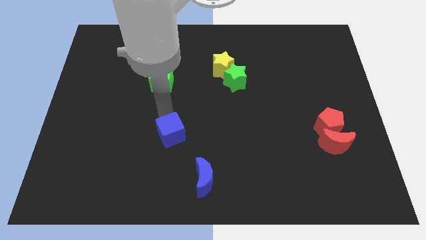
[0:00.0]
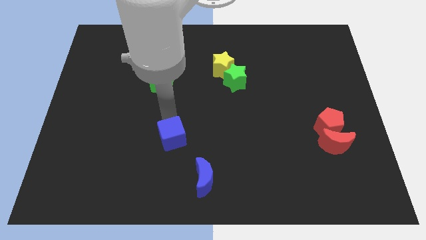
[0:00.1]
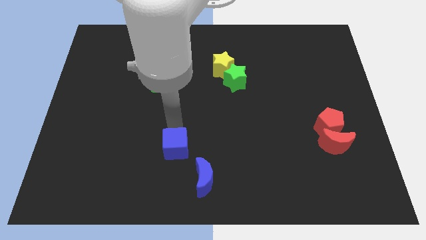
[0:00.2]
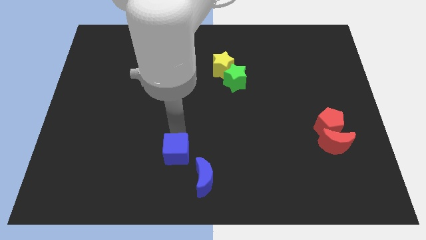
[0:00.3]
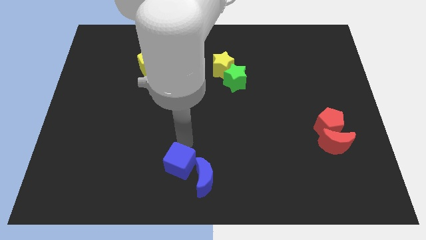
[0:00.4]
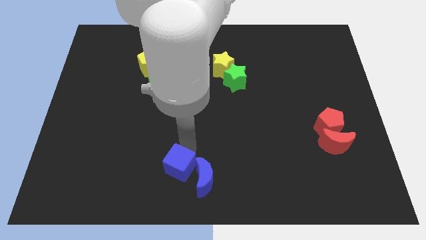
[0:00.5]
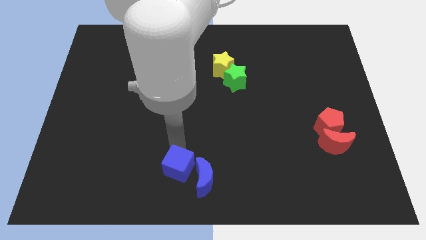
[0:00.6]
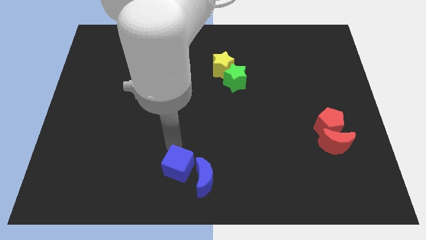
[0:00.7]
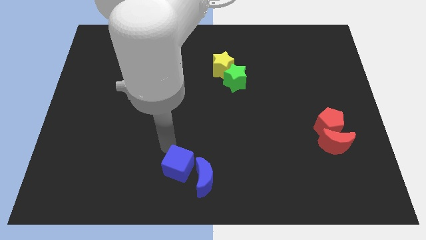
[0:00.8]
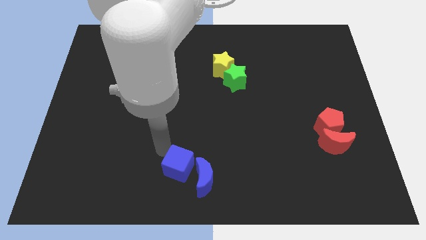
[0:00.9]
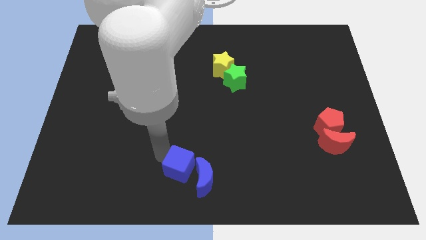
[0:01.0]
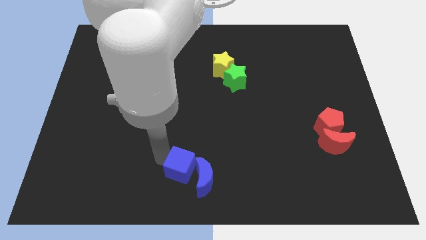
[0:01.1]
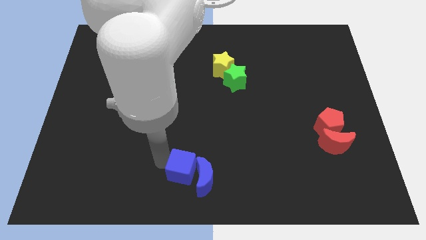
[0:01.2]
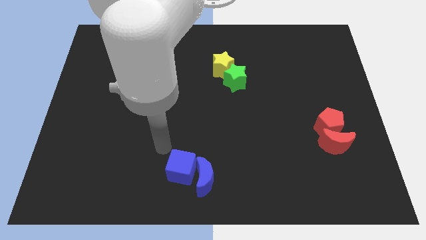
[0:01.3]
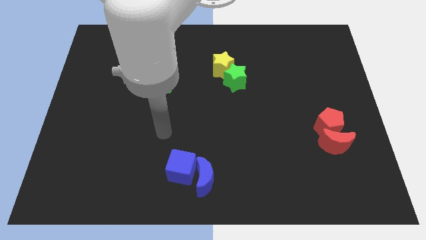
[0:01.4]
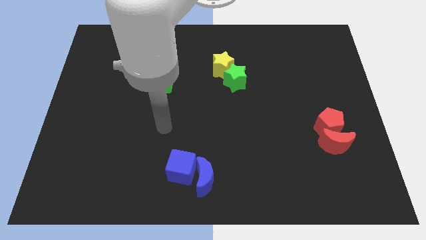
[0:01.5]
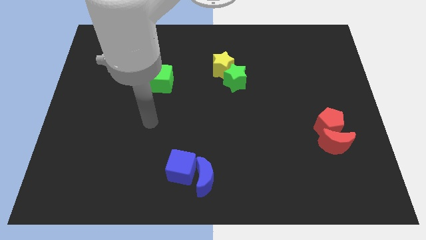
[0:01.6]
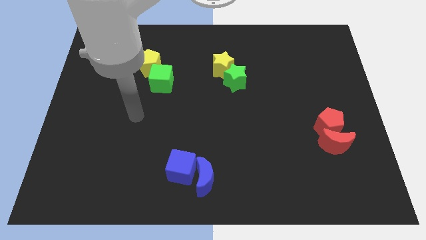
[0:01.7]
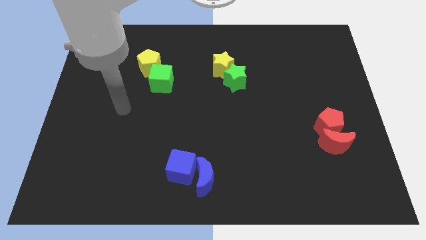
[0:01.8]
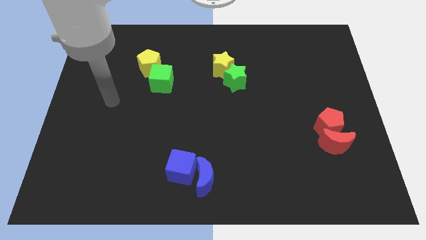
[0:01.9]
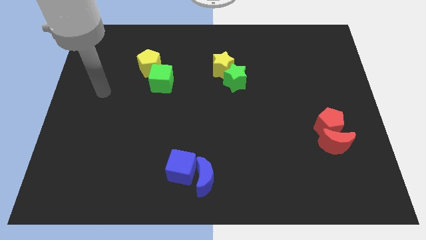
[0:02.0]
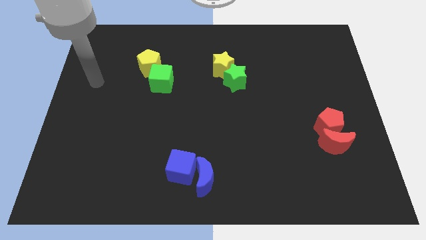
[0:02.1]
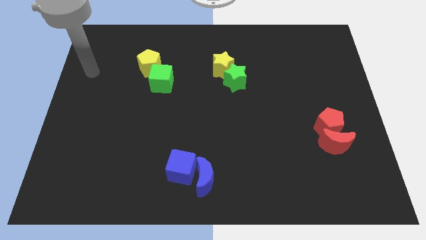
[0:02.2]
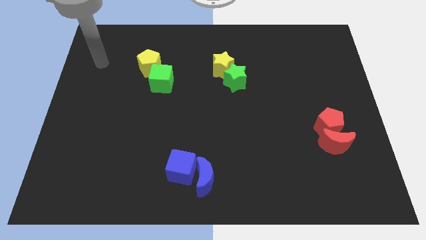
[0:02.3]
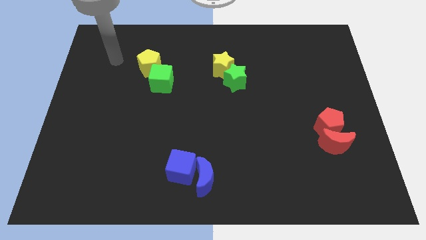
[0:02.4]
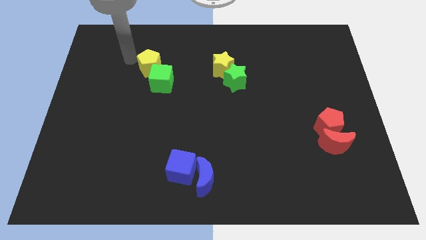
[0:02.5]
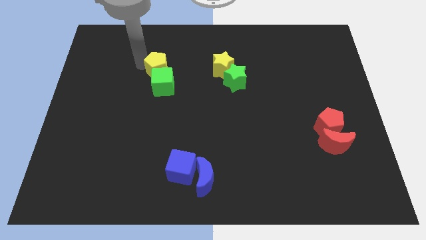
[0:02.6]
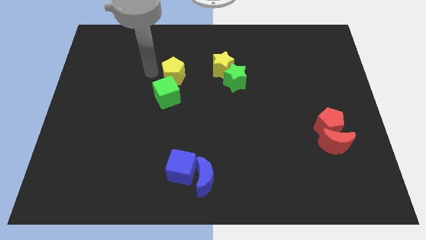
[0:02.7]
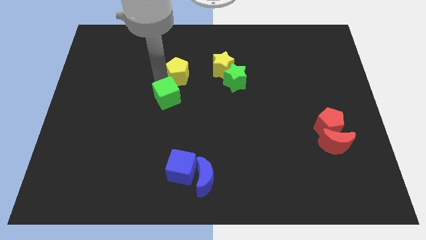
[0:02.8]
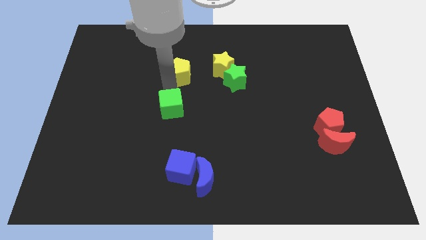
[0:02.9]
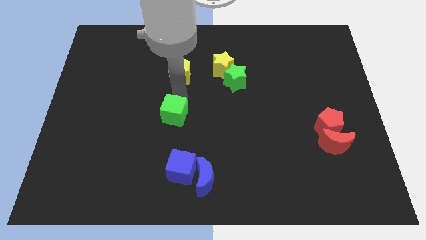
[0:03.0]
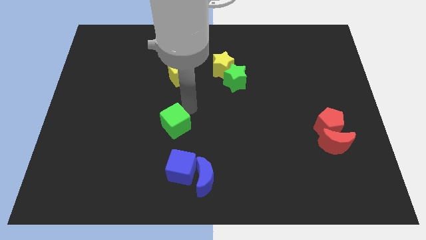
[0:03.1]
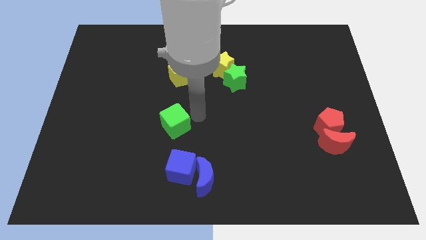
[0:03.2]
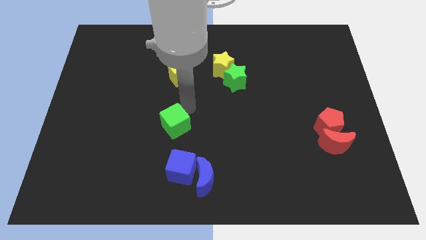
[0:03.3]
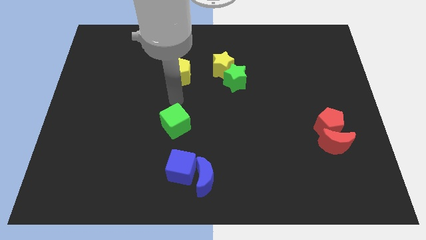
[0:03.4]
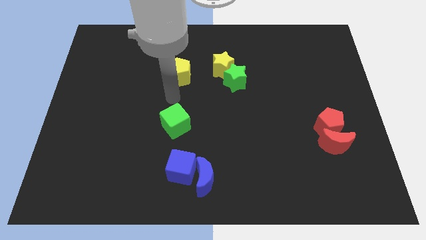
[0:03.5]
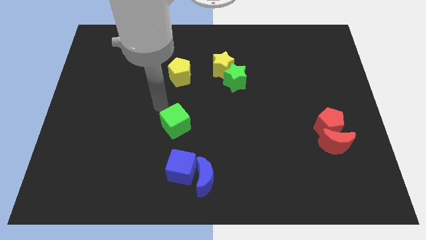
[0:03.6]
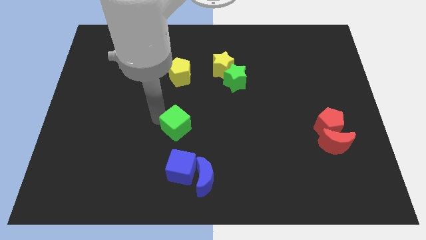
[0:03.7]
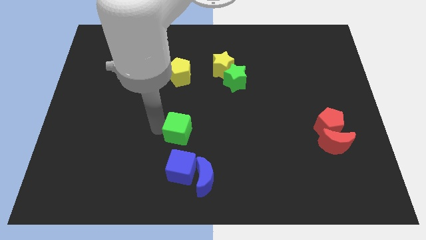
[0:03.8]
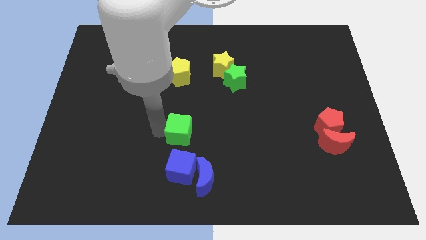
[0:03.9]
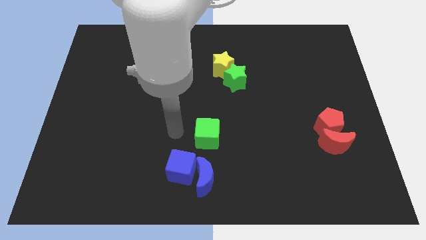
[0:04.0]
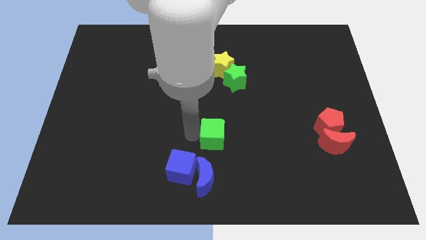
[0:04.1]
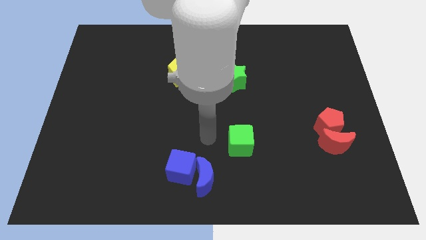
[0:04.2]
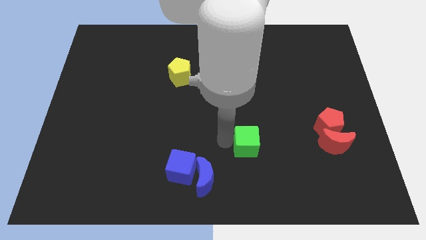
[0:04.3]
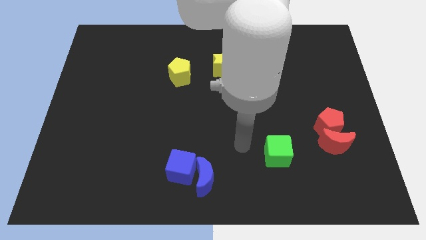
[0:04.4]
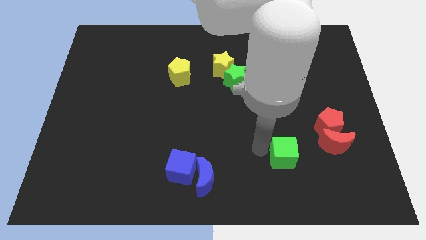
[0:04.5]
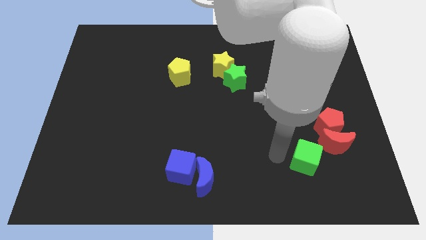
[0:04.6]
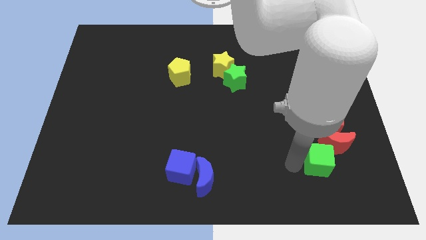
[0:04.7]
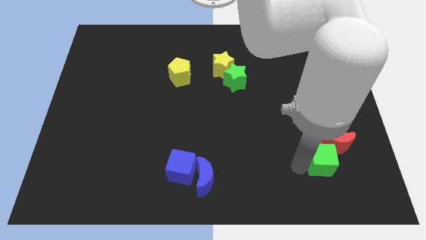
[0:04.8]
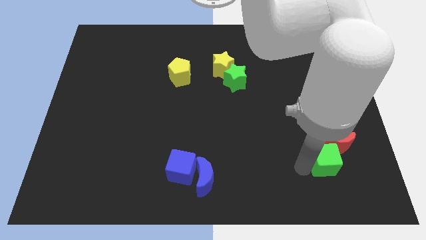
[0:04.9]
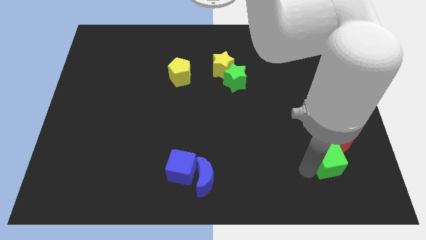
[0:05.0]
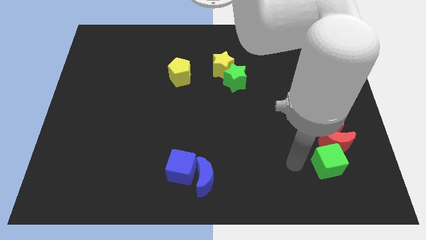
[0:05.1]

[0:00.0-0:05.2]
push the green cube into the red crescent

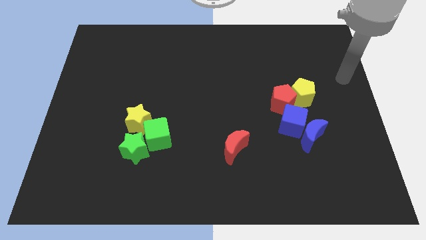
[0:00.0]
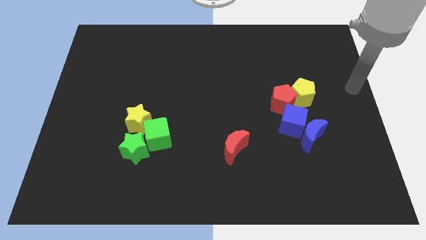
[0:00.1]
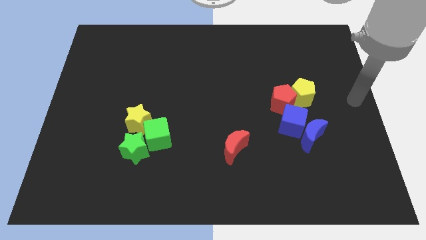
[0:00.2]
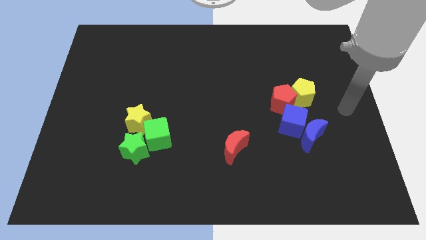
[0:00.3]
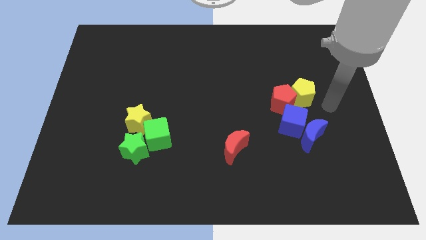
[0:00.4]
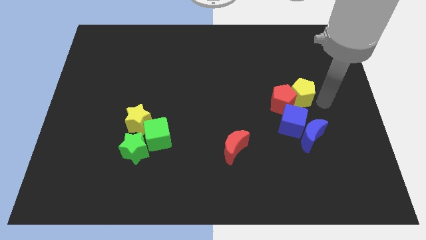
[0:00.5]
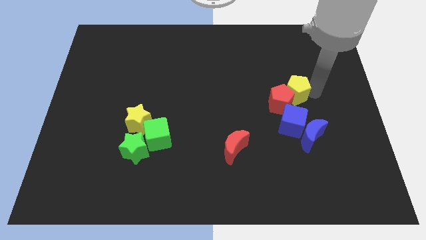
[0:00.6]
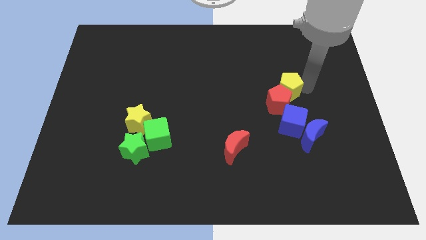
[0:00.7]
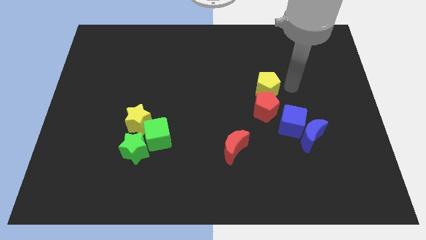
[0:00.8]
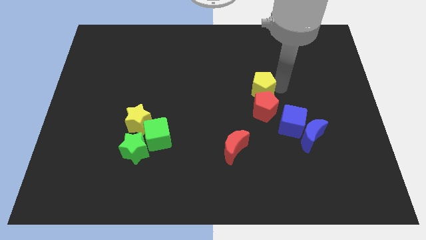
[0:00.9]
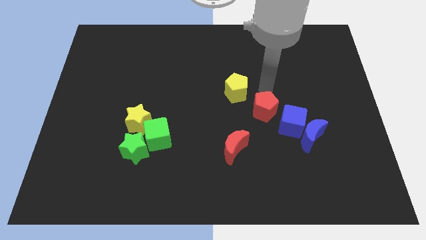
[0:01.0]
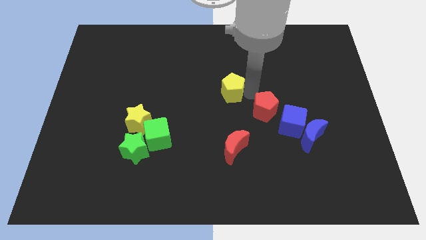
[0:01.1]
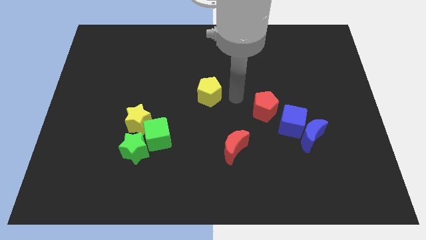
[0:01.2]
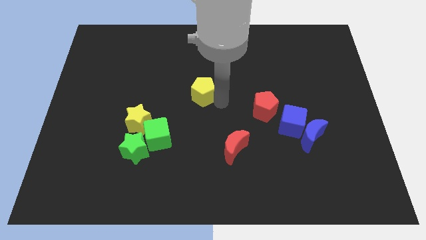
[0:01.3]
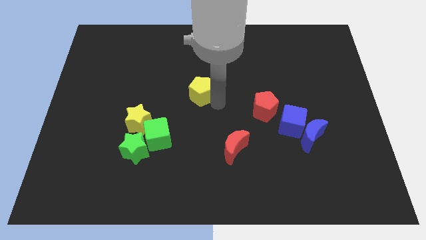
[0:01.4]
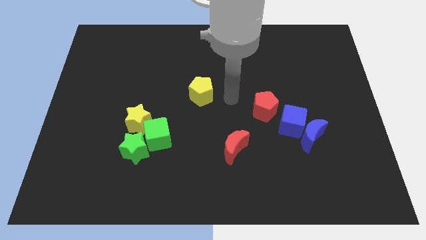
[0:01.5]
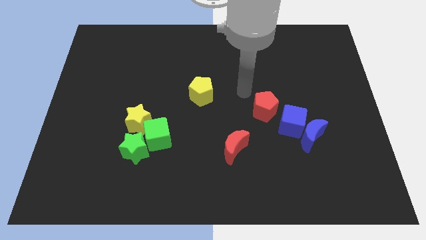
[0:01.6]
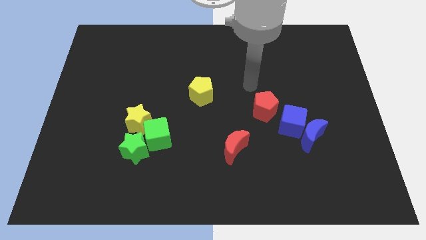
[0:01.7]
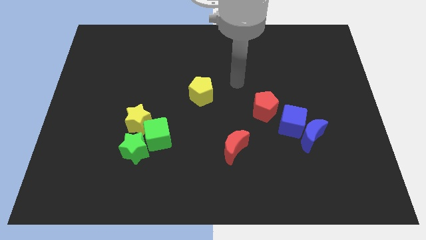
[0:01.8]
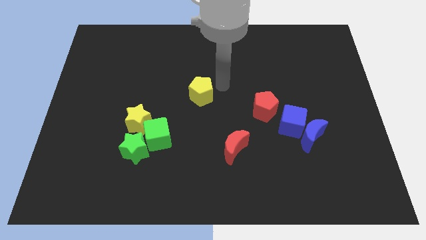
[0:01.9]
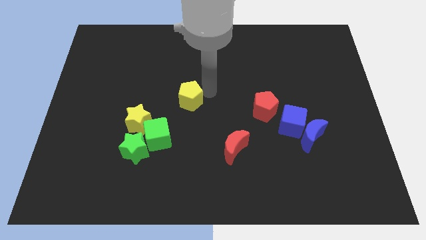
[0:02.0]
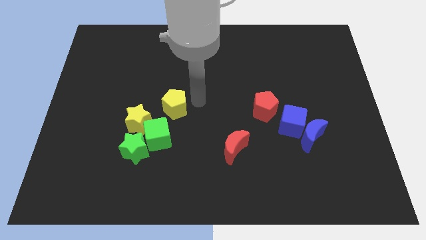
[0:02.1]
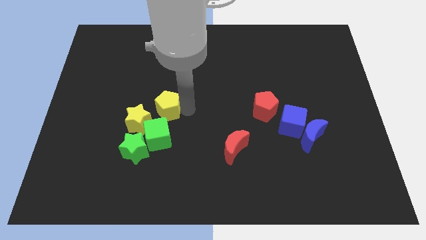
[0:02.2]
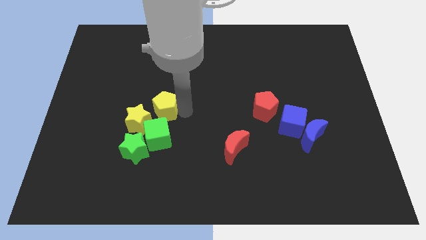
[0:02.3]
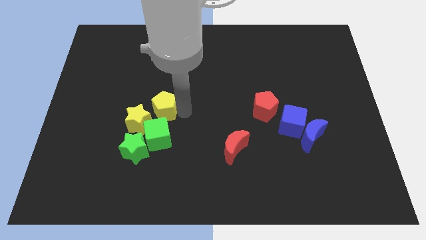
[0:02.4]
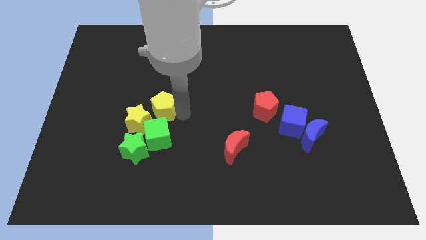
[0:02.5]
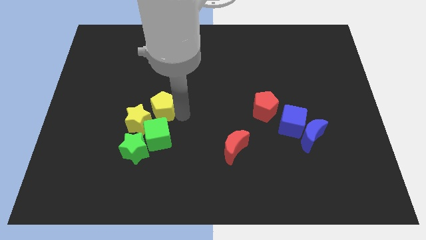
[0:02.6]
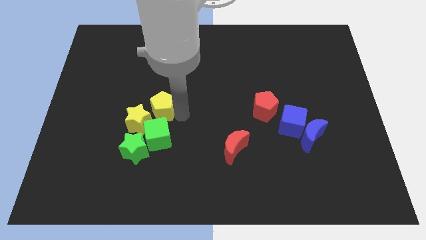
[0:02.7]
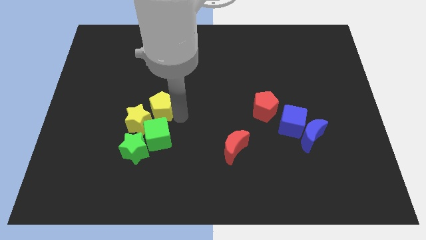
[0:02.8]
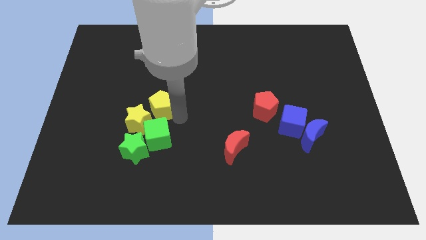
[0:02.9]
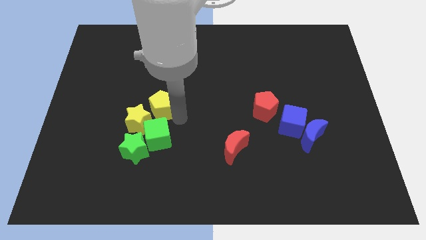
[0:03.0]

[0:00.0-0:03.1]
slide yellow pentagon on top of green cube

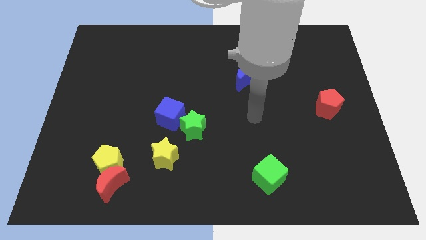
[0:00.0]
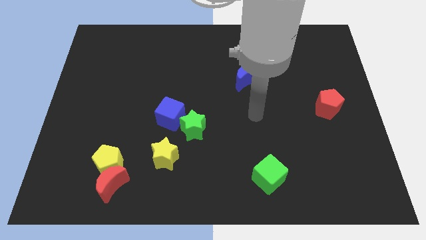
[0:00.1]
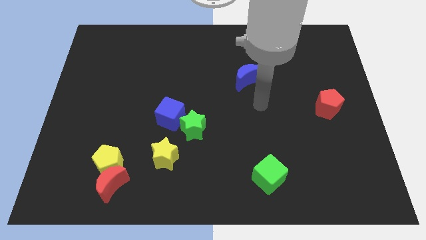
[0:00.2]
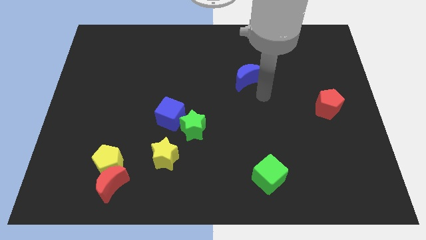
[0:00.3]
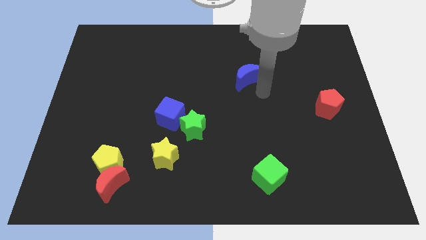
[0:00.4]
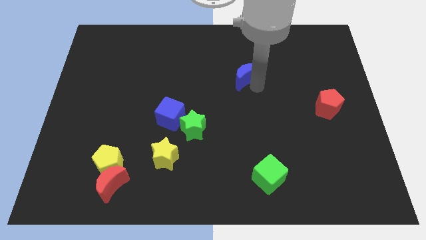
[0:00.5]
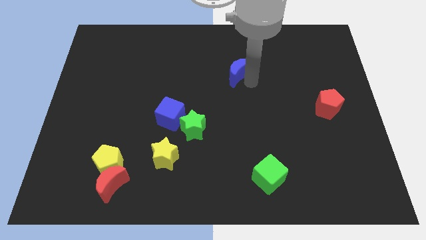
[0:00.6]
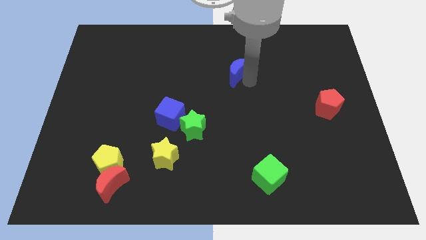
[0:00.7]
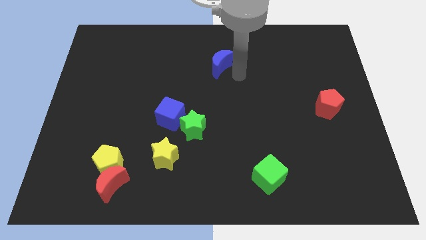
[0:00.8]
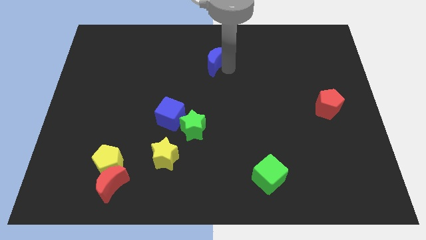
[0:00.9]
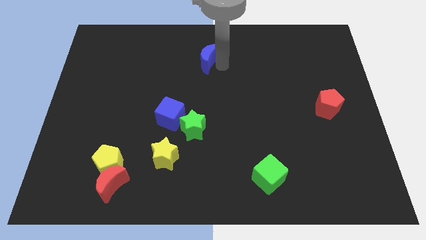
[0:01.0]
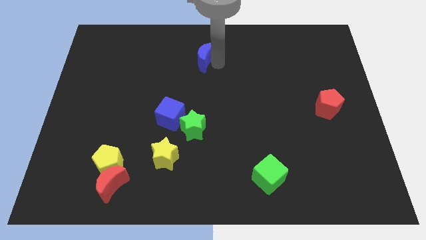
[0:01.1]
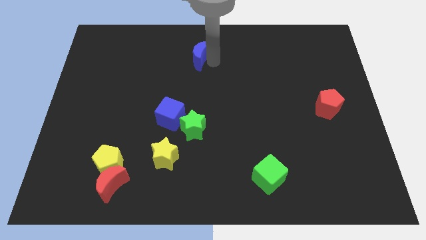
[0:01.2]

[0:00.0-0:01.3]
push the blue moon vertically above the green star
